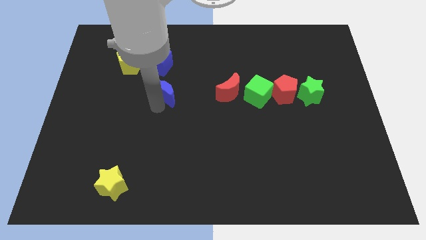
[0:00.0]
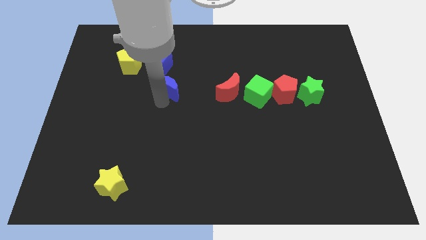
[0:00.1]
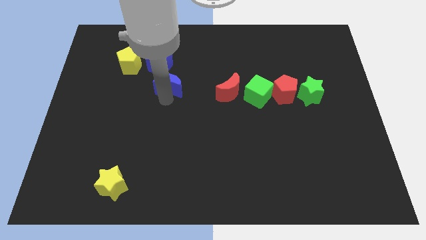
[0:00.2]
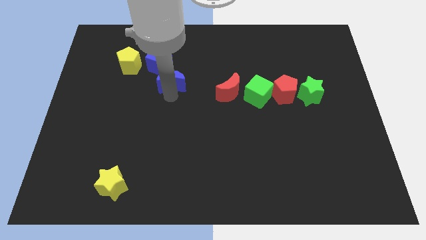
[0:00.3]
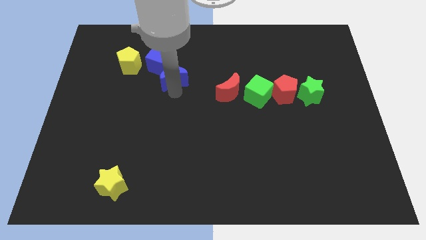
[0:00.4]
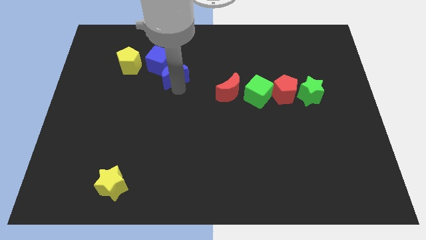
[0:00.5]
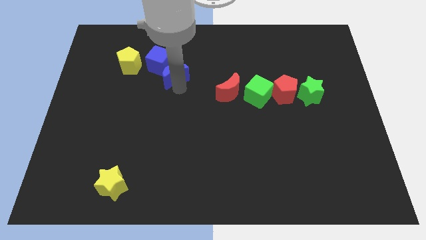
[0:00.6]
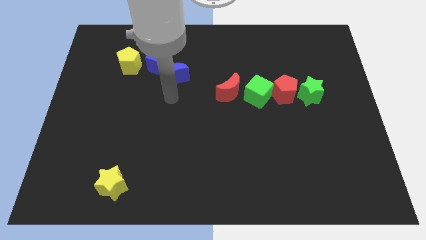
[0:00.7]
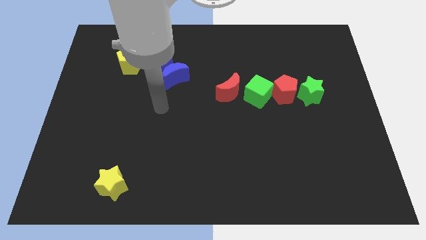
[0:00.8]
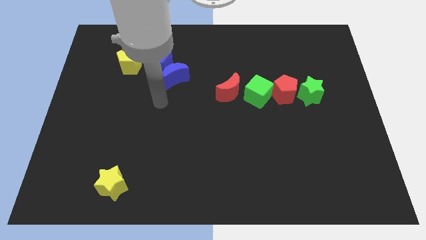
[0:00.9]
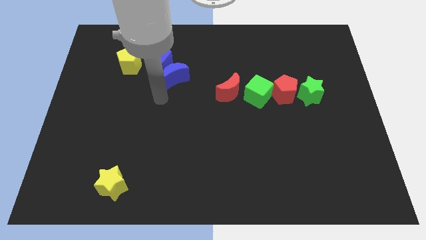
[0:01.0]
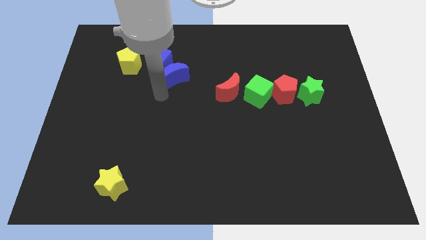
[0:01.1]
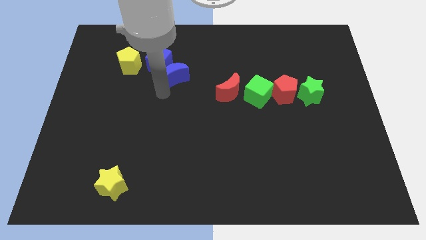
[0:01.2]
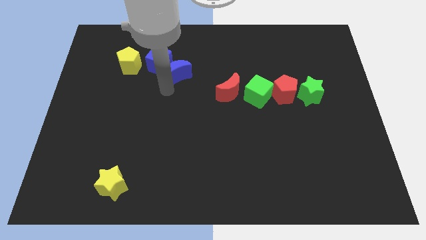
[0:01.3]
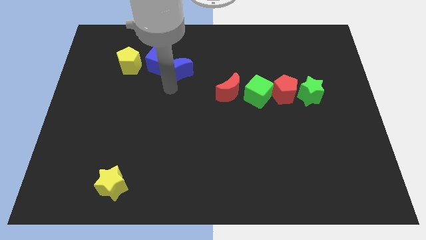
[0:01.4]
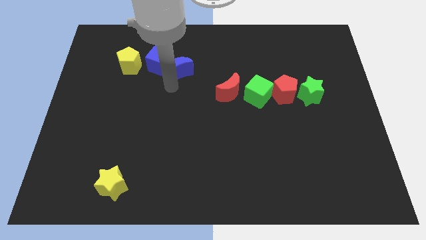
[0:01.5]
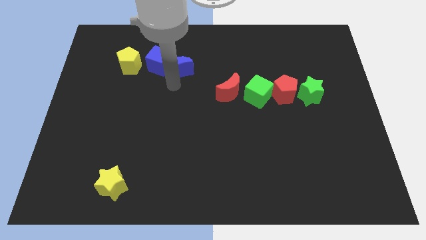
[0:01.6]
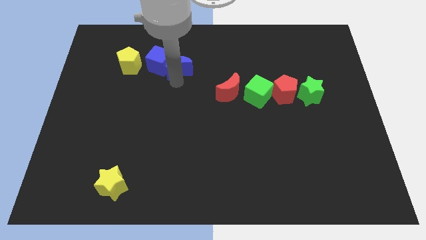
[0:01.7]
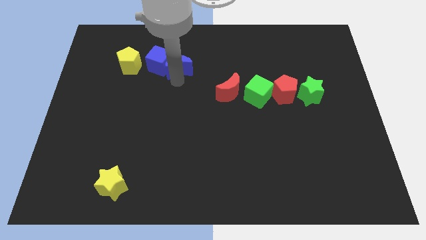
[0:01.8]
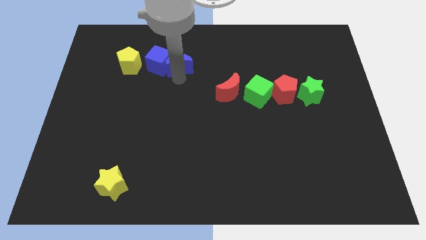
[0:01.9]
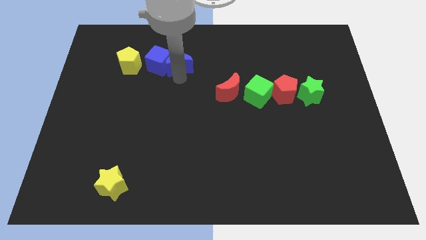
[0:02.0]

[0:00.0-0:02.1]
move blue moon into blue cube

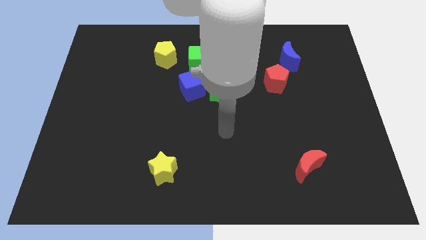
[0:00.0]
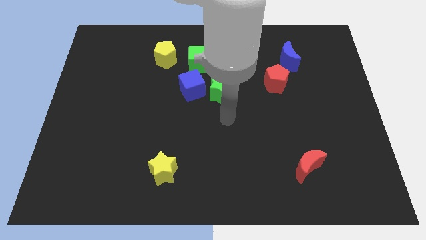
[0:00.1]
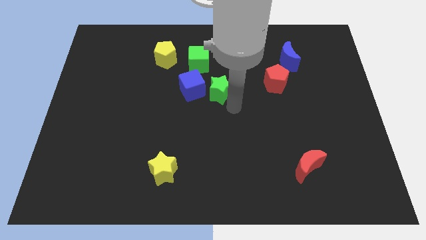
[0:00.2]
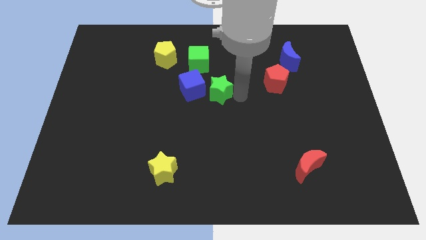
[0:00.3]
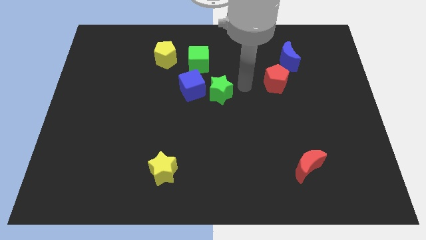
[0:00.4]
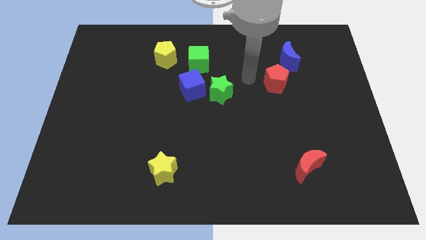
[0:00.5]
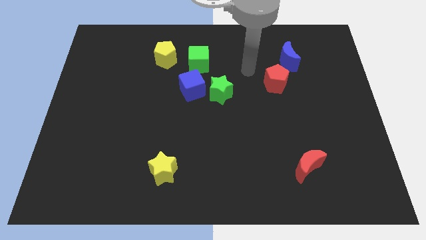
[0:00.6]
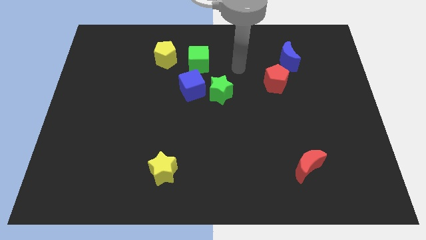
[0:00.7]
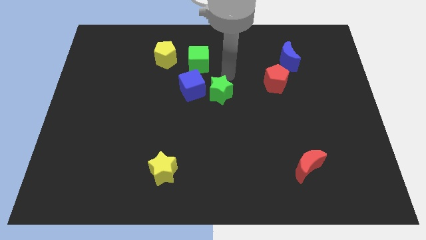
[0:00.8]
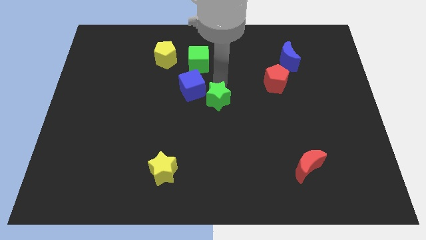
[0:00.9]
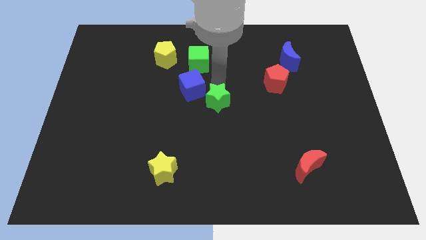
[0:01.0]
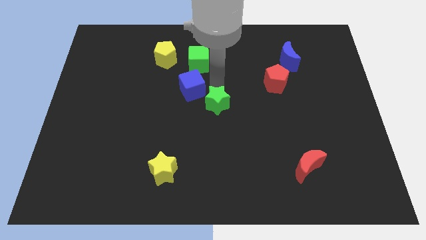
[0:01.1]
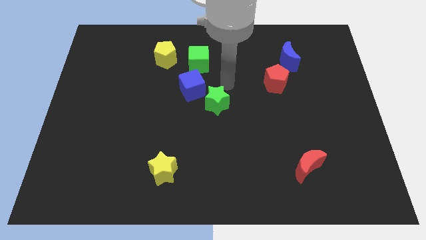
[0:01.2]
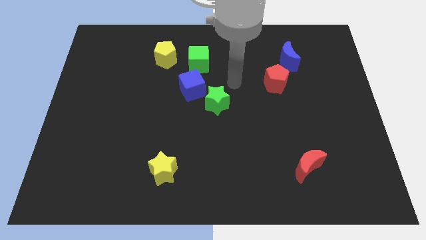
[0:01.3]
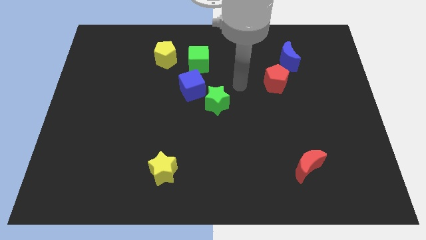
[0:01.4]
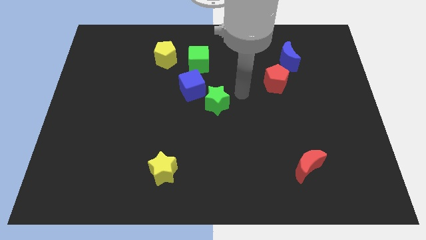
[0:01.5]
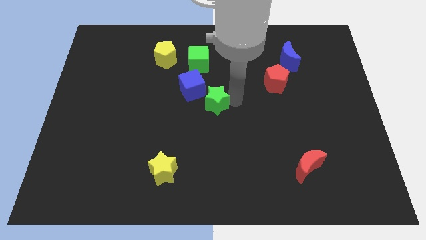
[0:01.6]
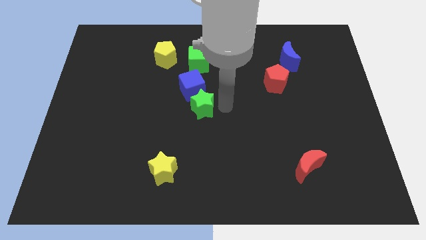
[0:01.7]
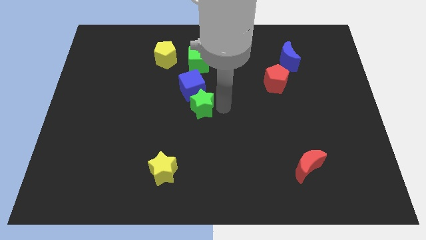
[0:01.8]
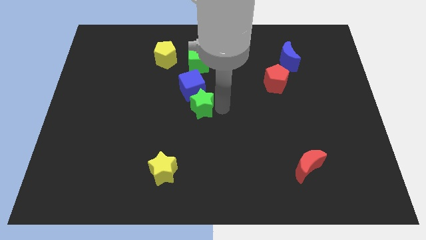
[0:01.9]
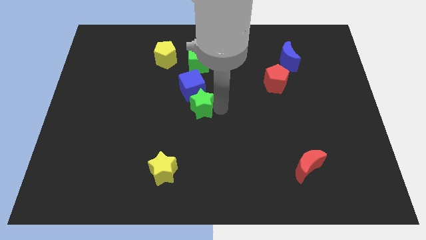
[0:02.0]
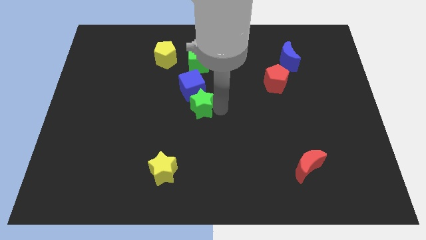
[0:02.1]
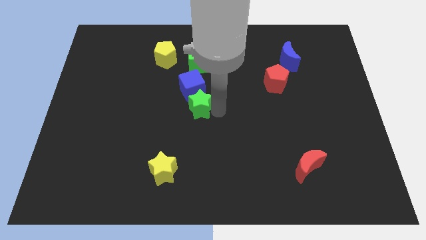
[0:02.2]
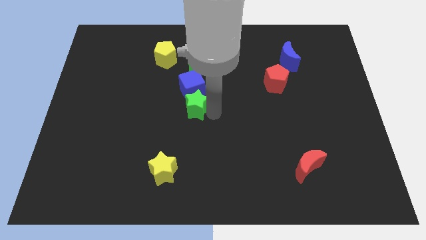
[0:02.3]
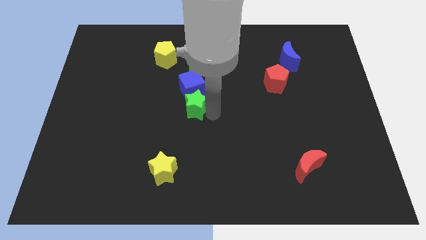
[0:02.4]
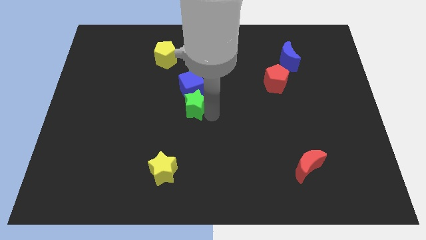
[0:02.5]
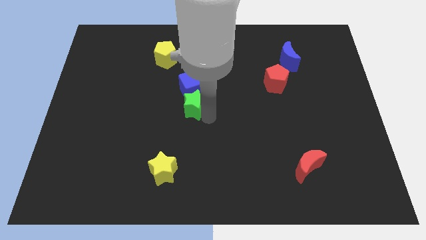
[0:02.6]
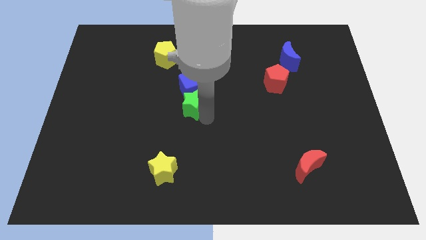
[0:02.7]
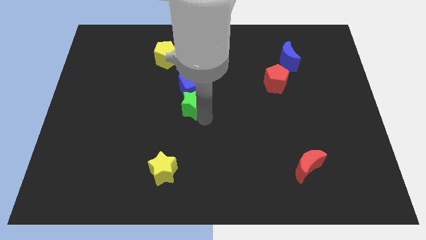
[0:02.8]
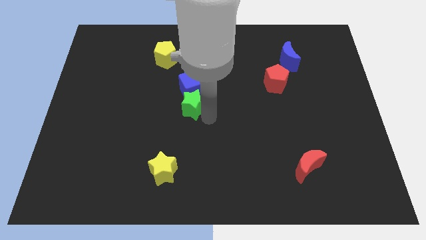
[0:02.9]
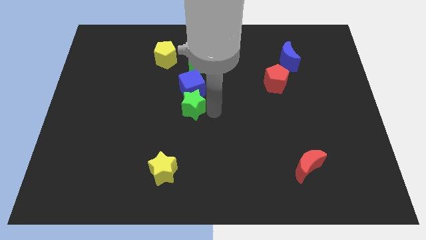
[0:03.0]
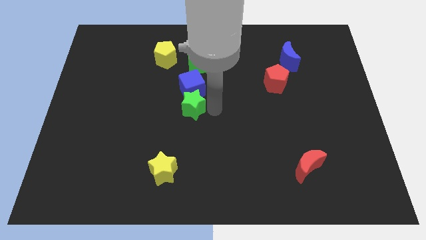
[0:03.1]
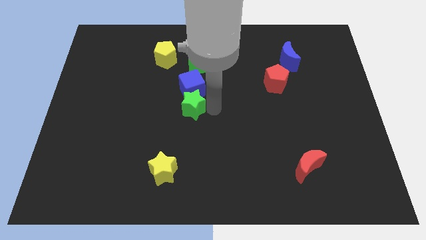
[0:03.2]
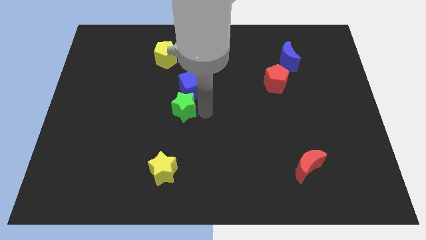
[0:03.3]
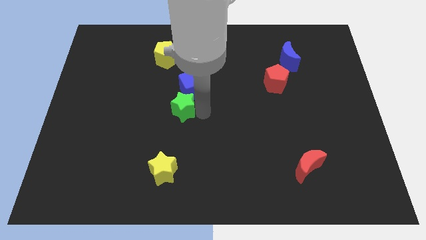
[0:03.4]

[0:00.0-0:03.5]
place the green star under the blue cube

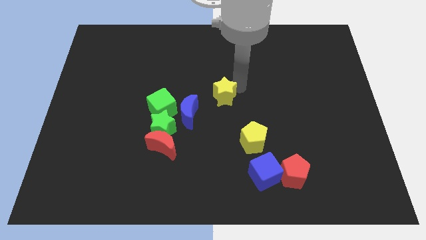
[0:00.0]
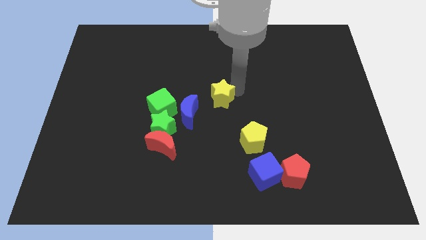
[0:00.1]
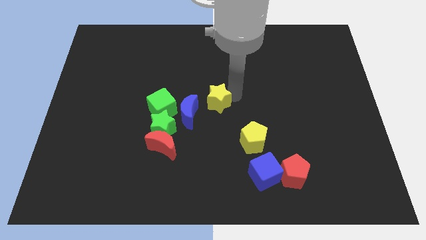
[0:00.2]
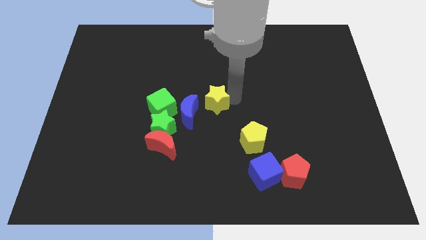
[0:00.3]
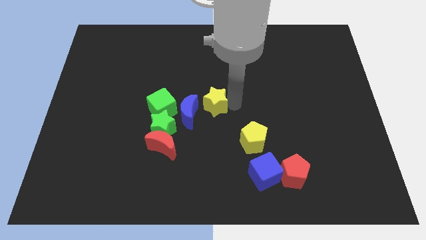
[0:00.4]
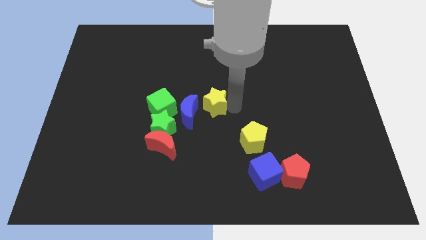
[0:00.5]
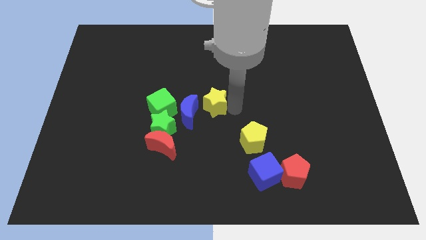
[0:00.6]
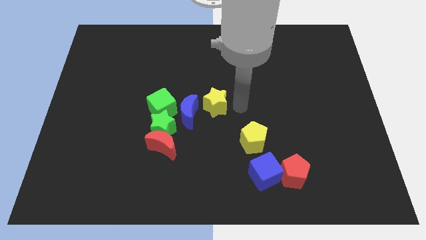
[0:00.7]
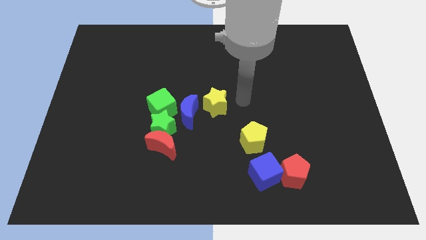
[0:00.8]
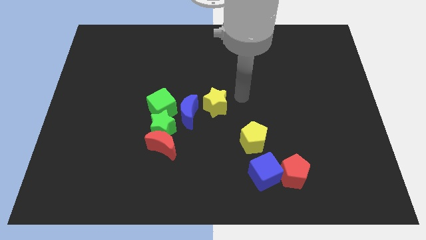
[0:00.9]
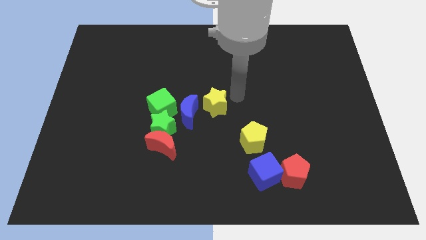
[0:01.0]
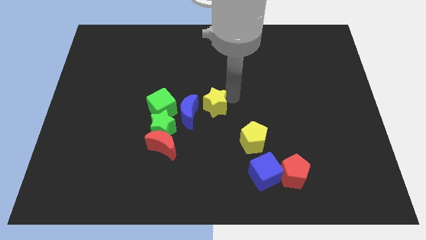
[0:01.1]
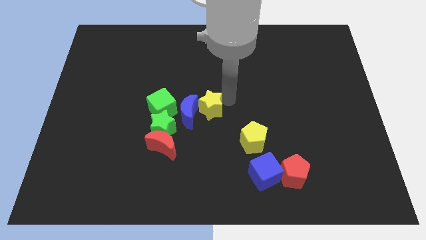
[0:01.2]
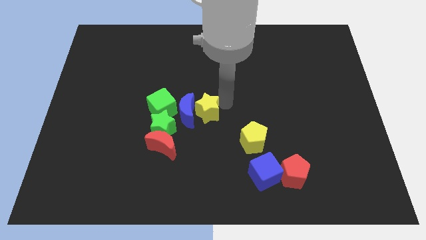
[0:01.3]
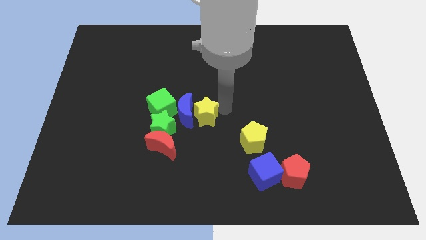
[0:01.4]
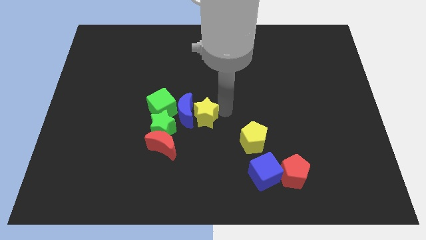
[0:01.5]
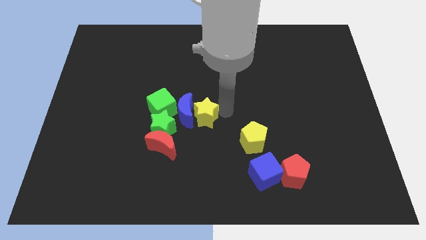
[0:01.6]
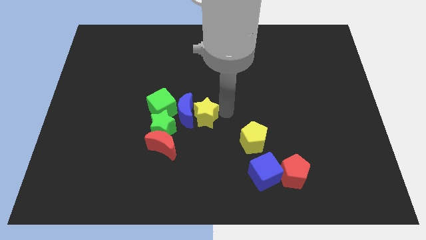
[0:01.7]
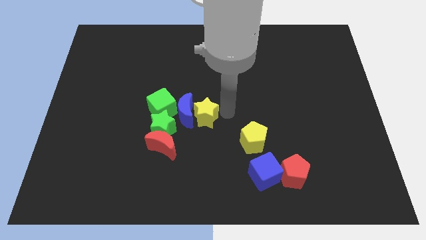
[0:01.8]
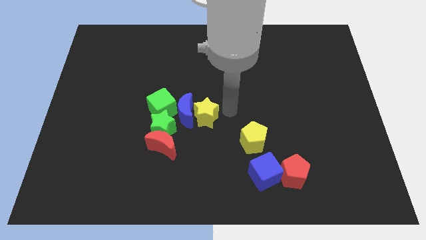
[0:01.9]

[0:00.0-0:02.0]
move the yellow star to the center of the board

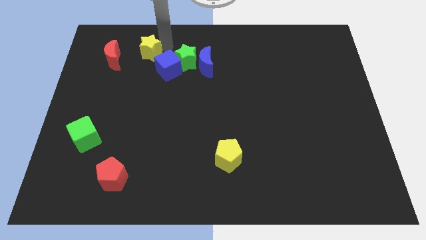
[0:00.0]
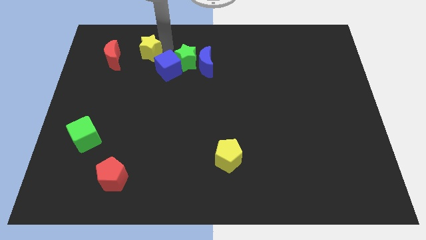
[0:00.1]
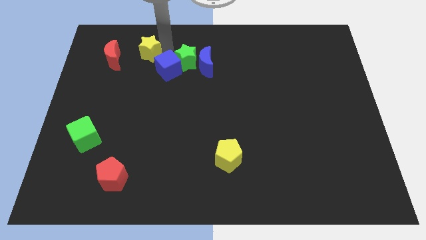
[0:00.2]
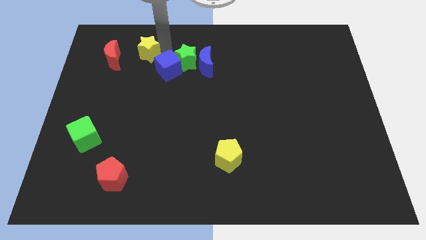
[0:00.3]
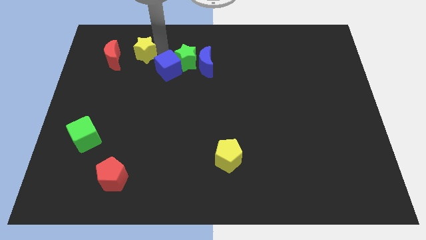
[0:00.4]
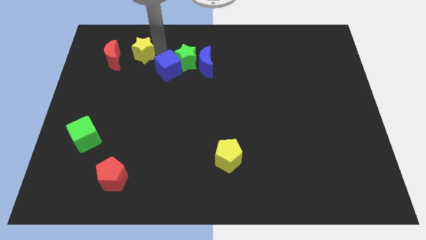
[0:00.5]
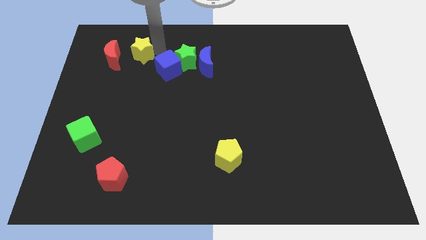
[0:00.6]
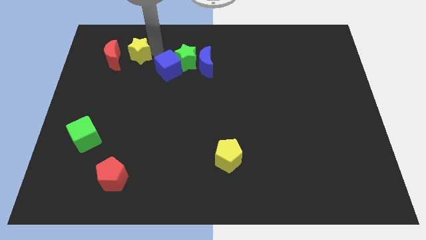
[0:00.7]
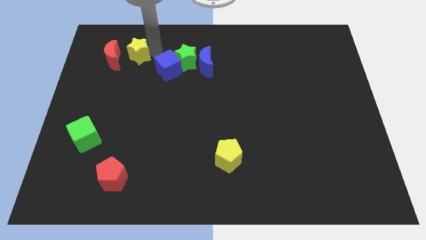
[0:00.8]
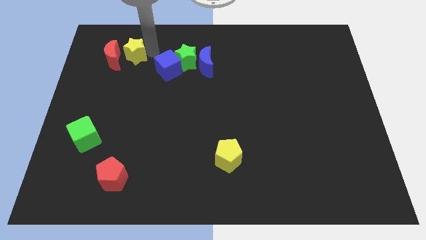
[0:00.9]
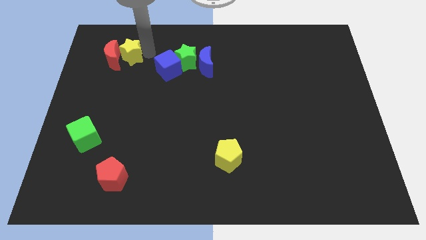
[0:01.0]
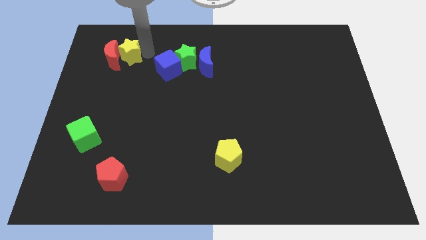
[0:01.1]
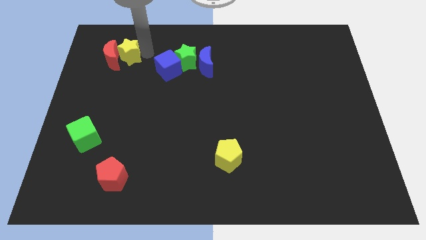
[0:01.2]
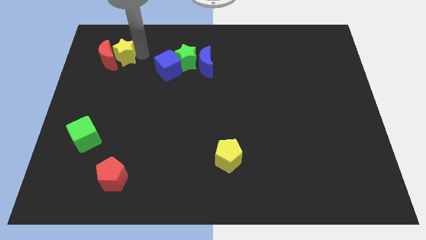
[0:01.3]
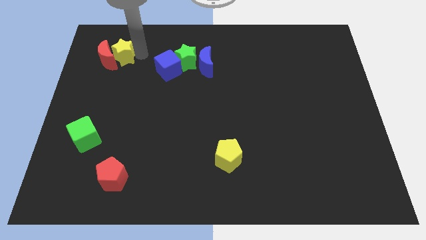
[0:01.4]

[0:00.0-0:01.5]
move the yellow star into the right side of the red crescent
